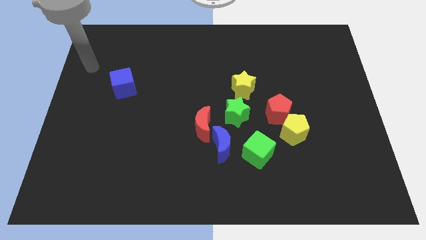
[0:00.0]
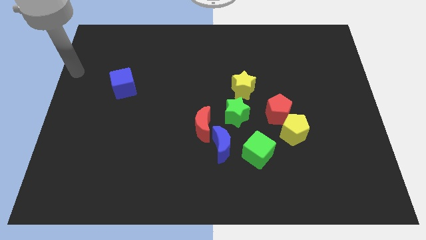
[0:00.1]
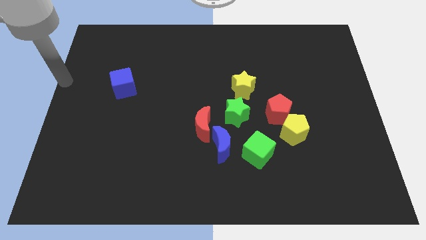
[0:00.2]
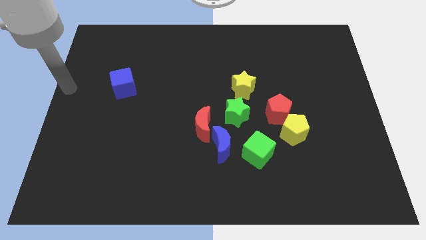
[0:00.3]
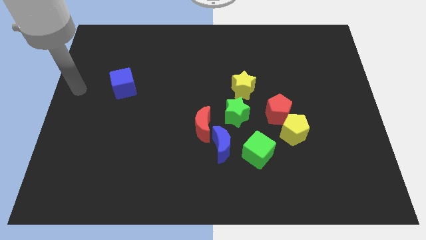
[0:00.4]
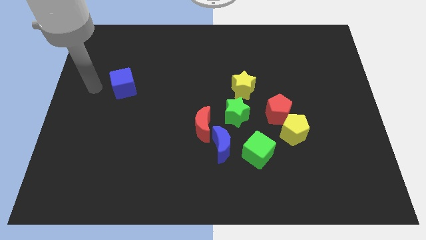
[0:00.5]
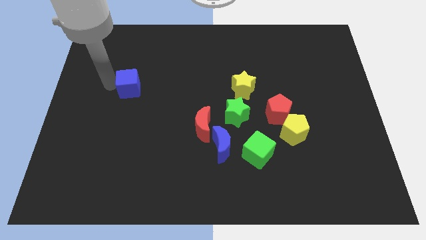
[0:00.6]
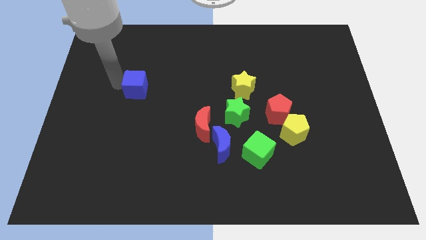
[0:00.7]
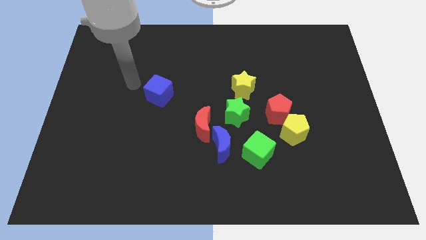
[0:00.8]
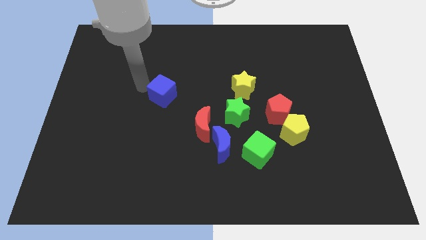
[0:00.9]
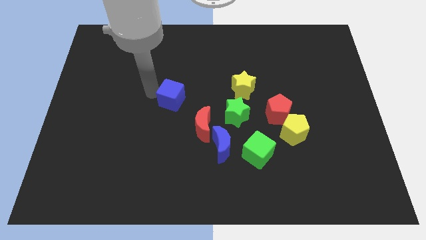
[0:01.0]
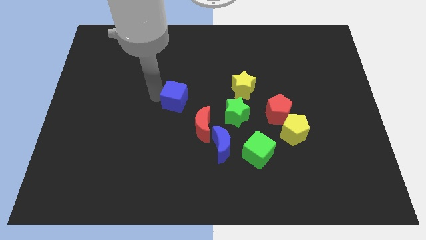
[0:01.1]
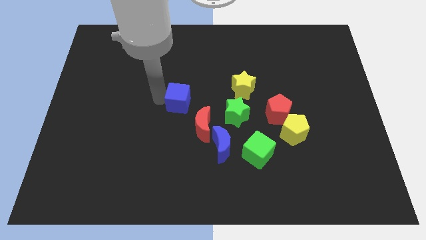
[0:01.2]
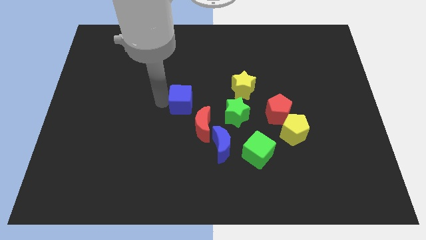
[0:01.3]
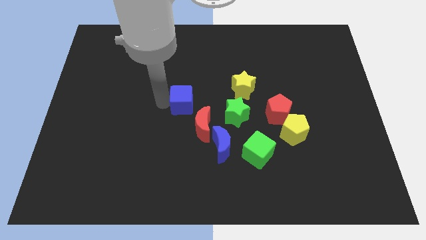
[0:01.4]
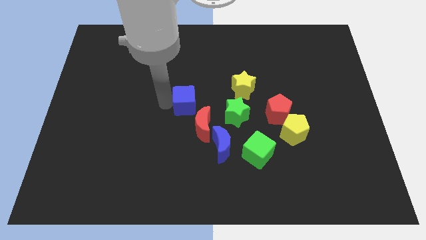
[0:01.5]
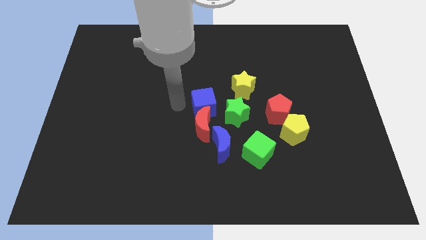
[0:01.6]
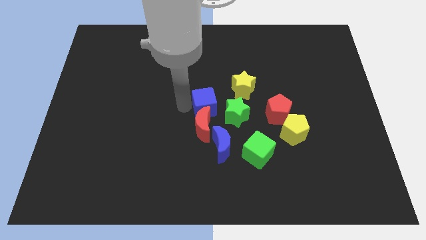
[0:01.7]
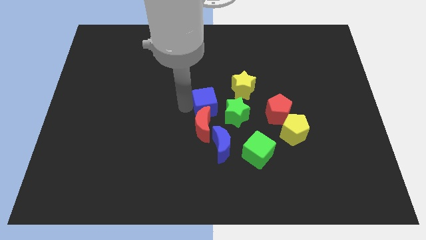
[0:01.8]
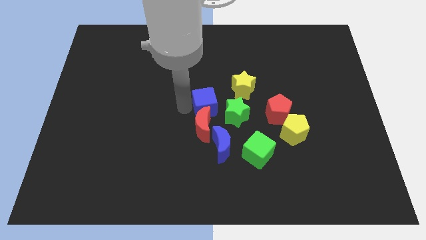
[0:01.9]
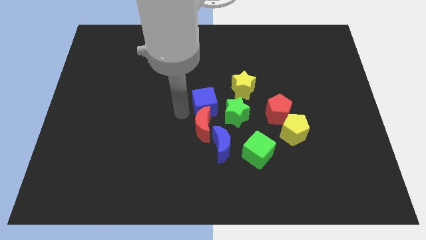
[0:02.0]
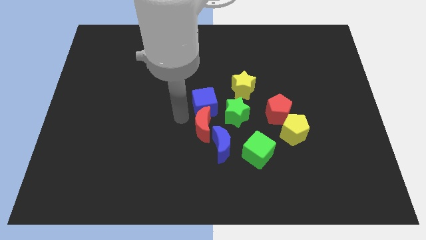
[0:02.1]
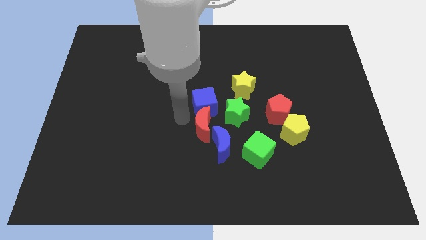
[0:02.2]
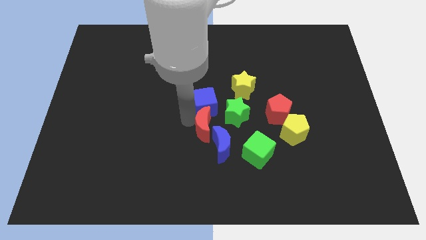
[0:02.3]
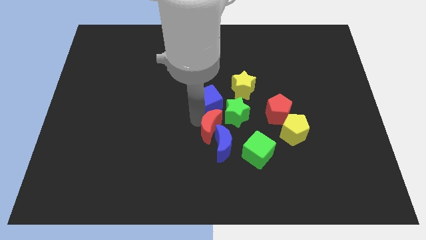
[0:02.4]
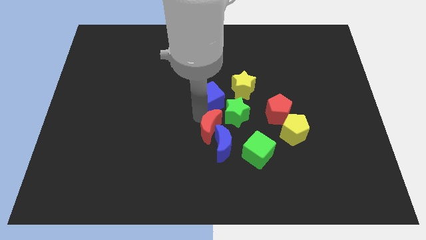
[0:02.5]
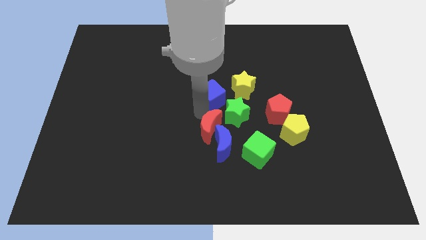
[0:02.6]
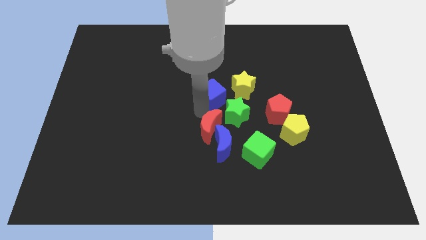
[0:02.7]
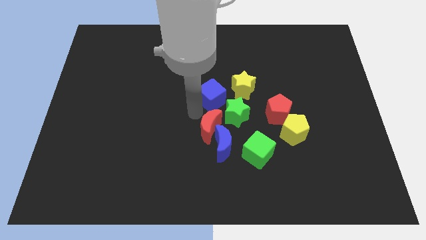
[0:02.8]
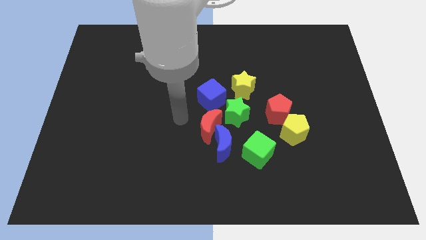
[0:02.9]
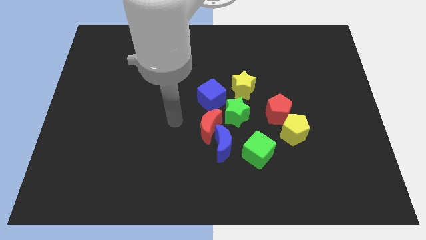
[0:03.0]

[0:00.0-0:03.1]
move the blue cube above the red moon

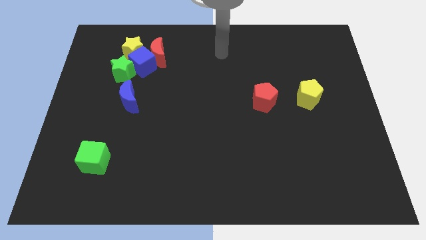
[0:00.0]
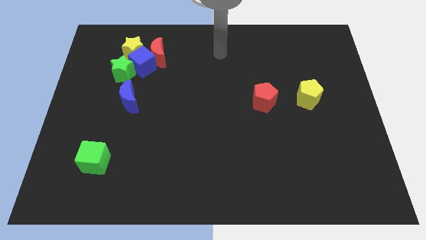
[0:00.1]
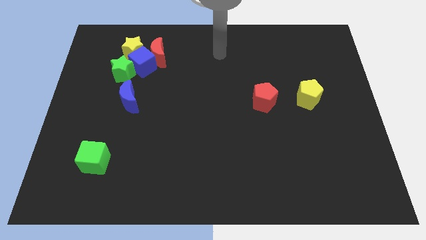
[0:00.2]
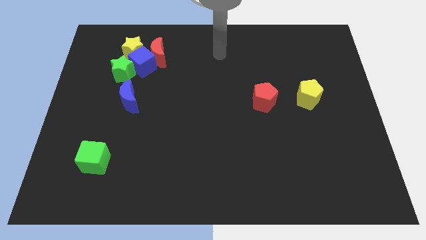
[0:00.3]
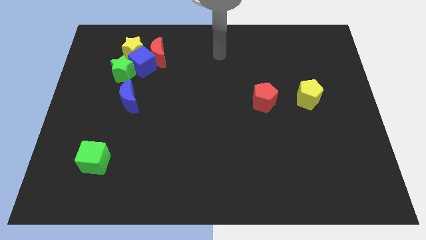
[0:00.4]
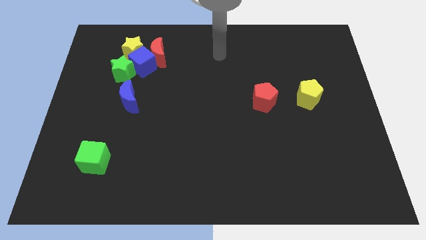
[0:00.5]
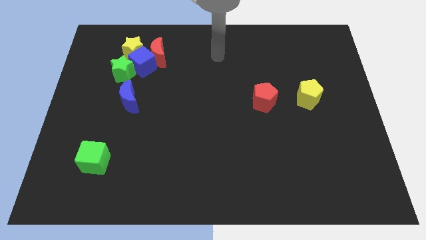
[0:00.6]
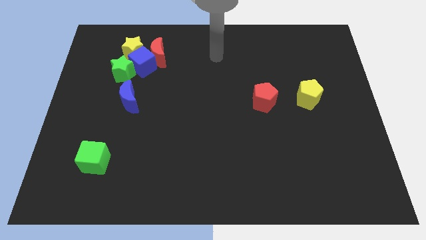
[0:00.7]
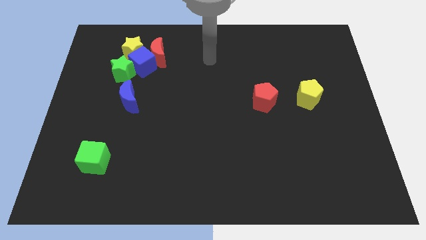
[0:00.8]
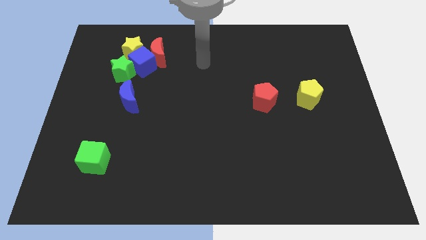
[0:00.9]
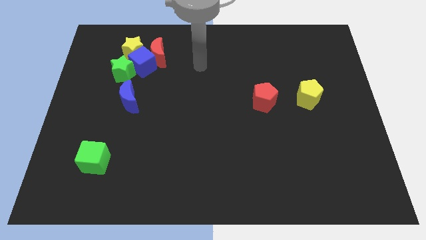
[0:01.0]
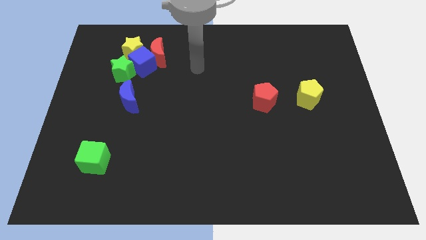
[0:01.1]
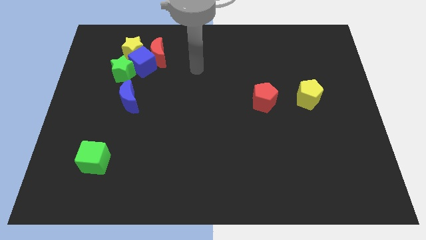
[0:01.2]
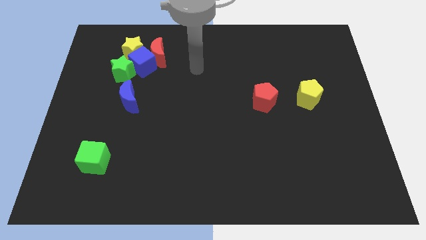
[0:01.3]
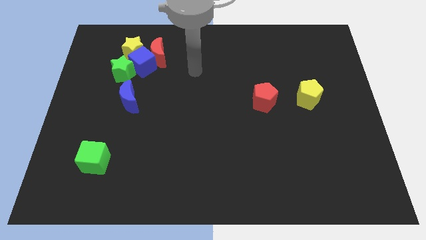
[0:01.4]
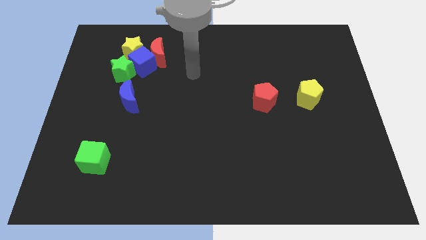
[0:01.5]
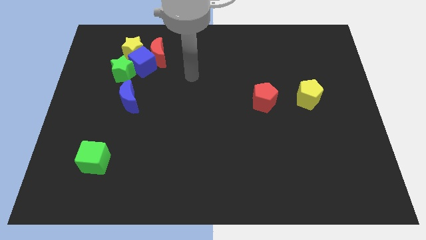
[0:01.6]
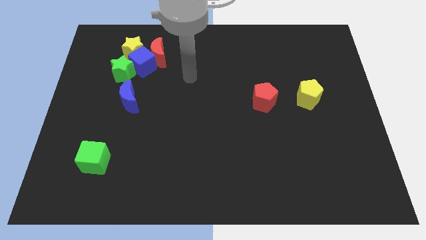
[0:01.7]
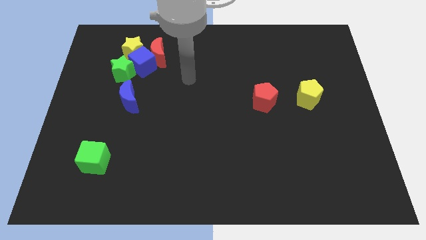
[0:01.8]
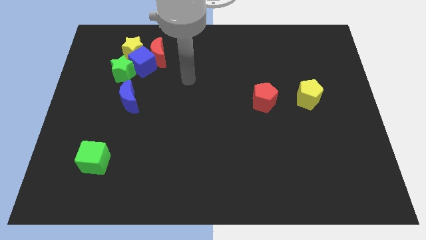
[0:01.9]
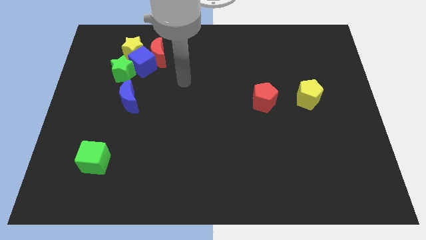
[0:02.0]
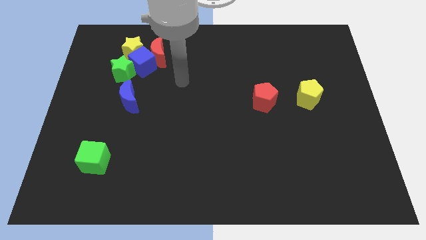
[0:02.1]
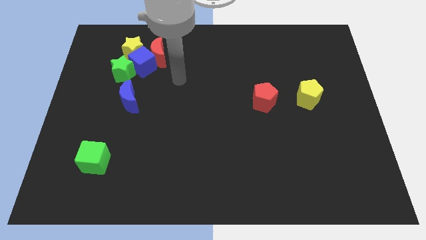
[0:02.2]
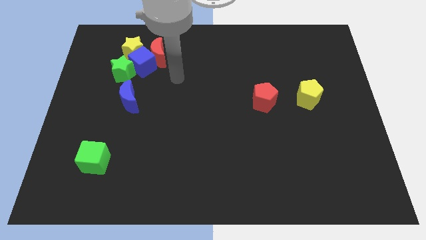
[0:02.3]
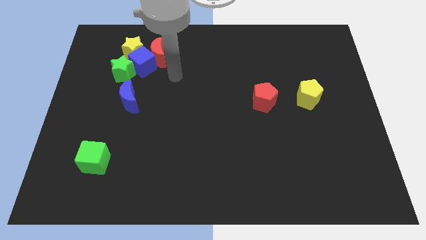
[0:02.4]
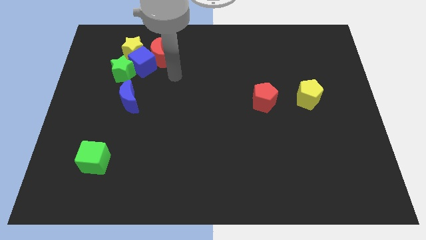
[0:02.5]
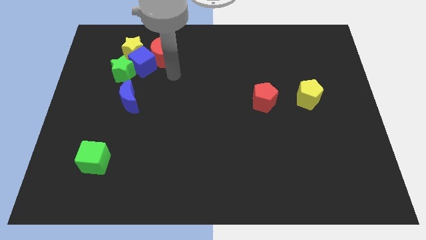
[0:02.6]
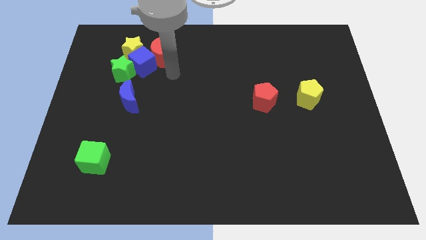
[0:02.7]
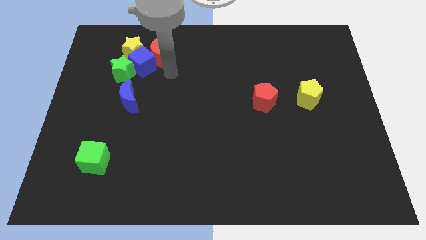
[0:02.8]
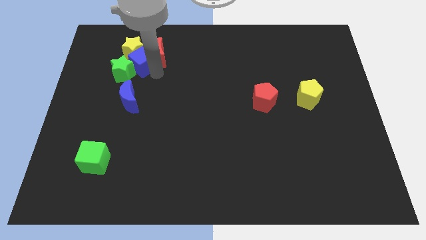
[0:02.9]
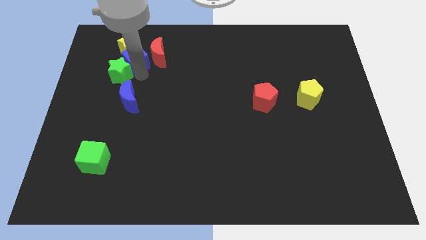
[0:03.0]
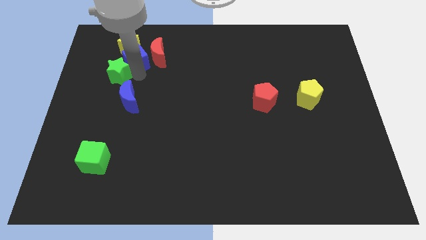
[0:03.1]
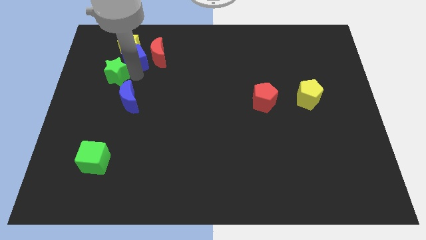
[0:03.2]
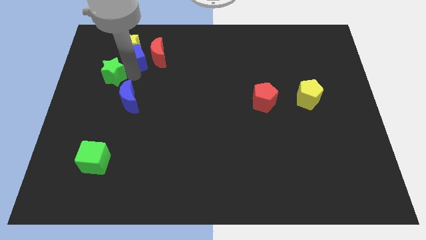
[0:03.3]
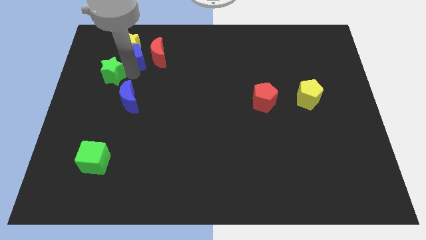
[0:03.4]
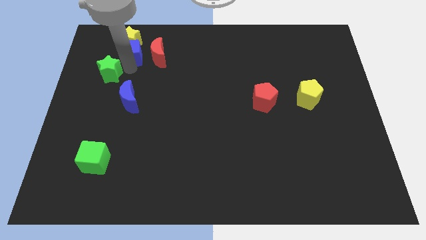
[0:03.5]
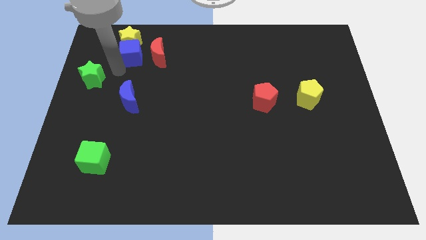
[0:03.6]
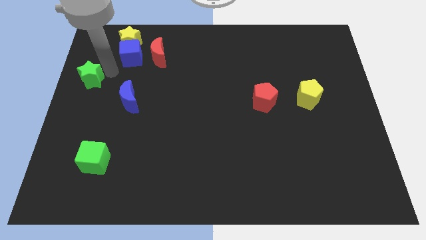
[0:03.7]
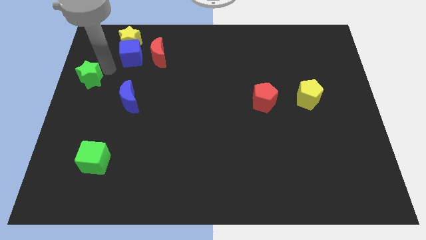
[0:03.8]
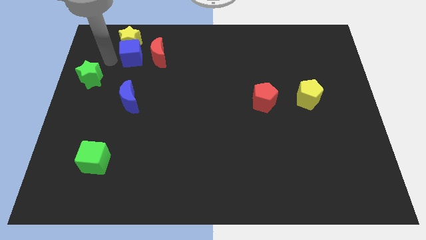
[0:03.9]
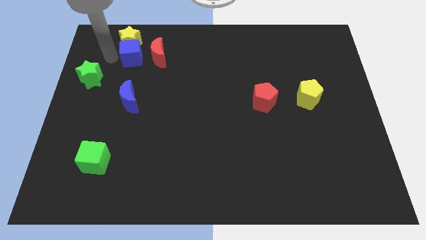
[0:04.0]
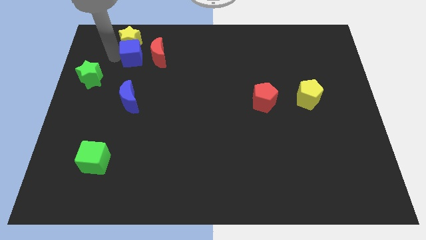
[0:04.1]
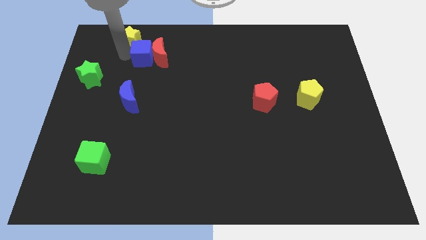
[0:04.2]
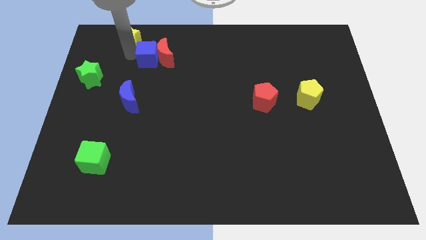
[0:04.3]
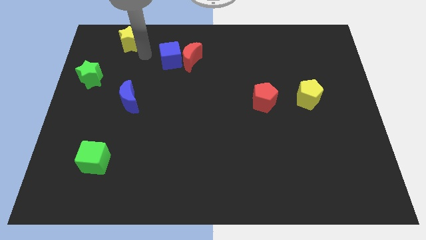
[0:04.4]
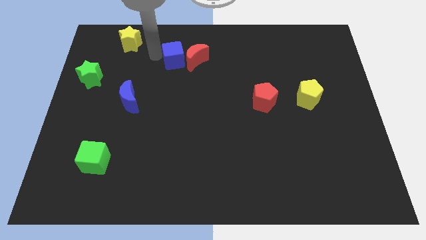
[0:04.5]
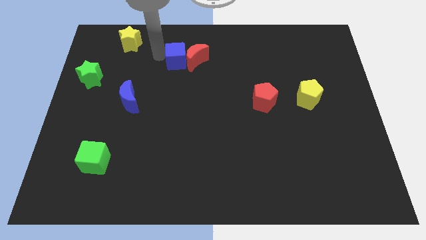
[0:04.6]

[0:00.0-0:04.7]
separate the green star yellow star and blue cube

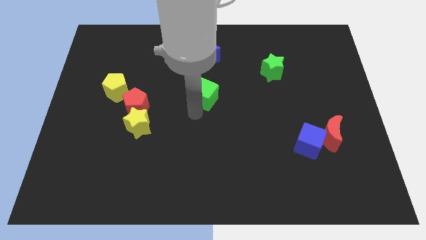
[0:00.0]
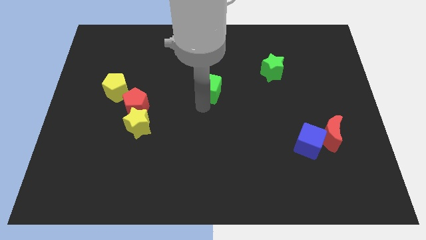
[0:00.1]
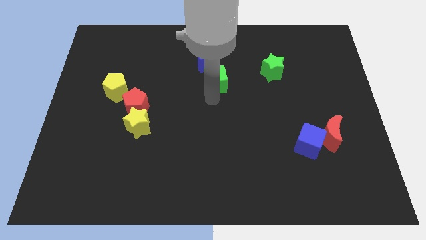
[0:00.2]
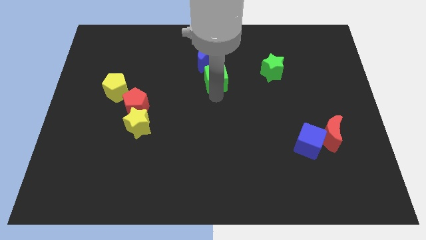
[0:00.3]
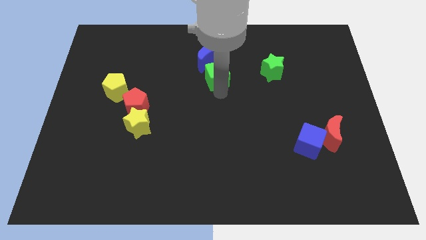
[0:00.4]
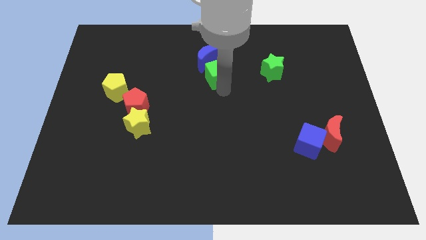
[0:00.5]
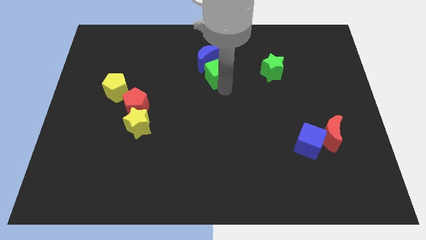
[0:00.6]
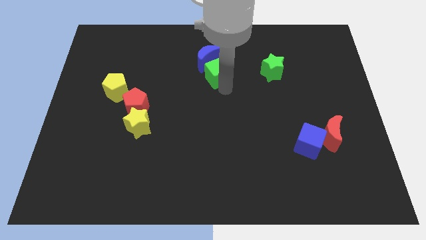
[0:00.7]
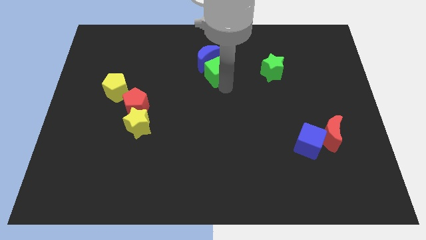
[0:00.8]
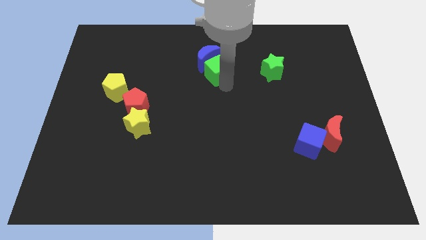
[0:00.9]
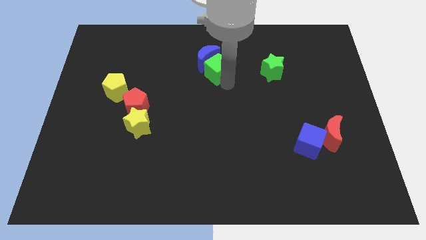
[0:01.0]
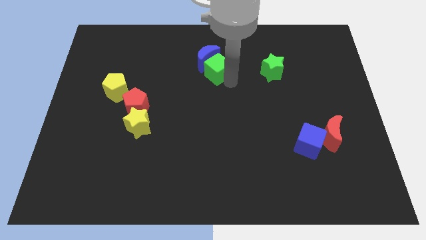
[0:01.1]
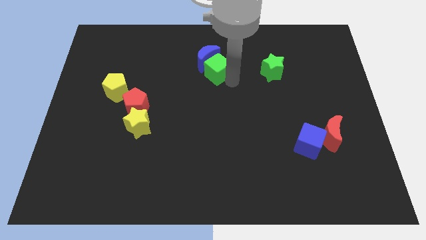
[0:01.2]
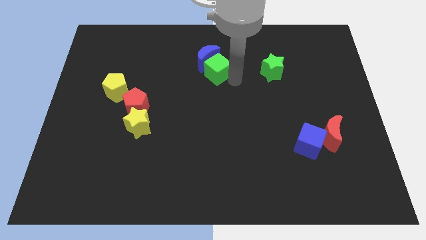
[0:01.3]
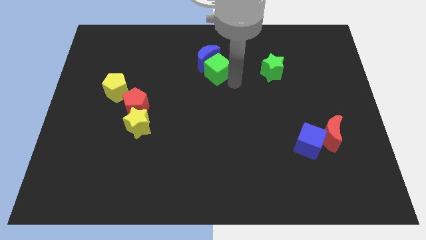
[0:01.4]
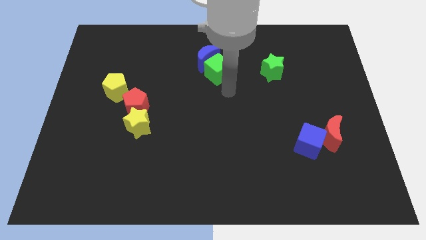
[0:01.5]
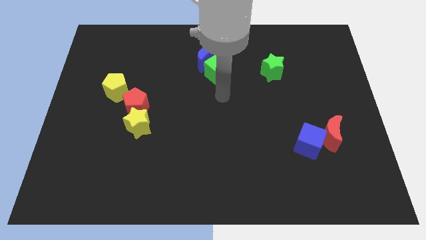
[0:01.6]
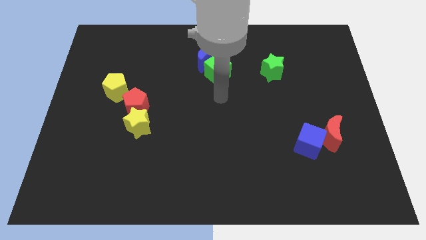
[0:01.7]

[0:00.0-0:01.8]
move the green cube close to the blue crescent
